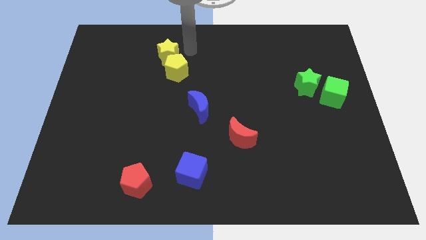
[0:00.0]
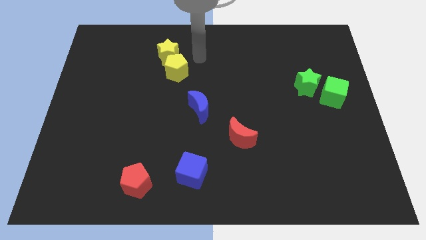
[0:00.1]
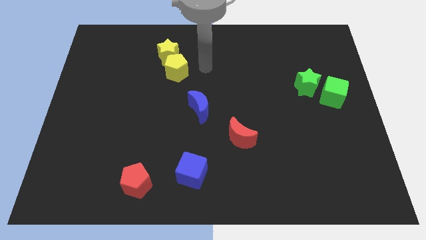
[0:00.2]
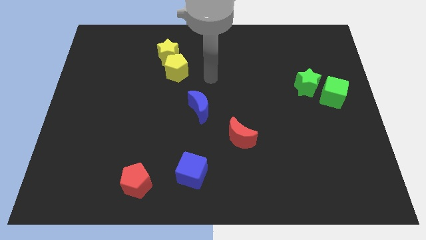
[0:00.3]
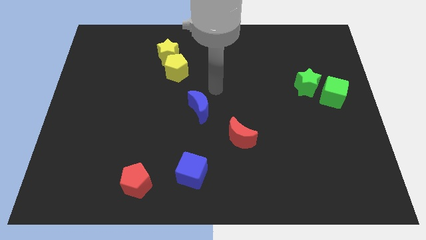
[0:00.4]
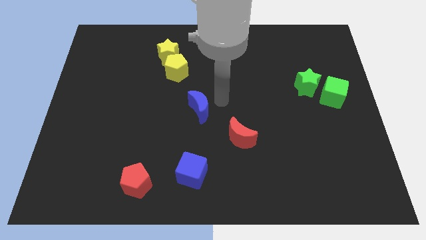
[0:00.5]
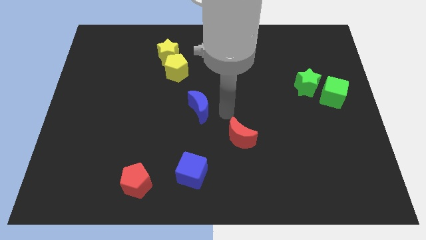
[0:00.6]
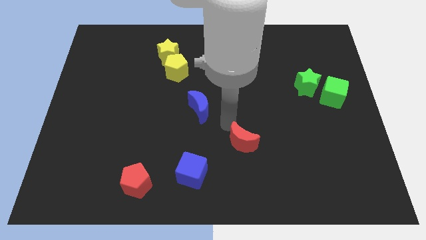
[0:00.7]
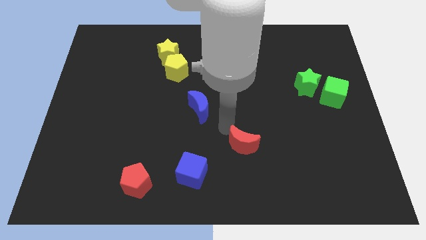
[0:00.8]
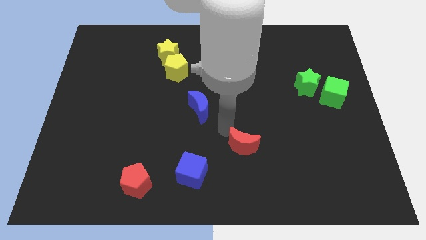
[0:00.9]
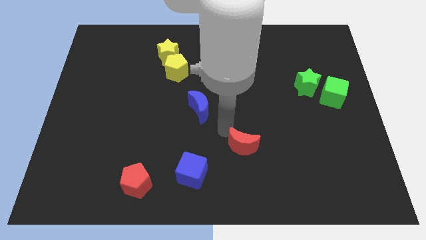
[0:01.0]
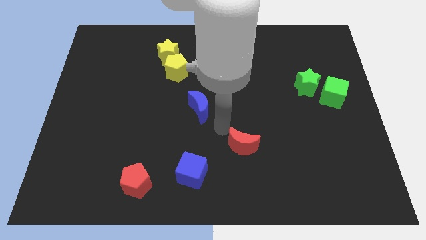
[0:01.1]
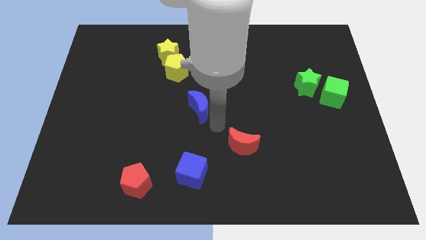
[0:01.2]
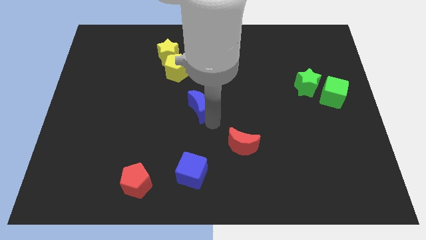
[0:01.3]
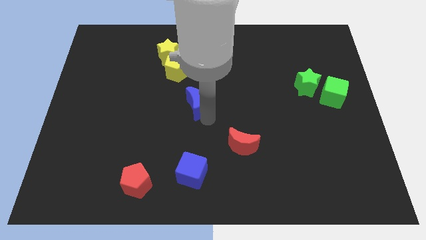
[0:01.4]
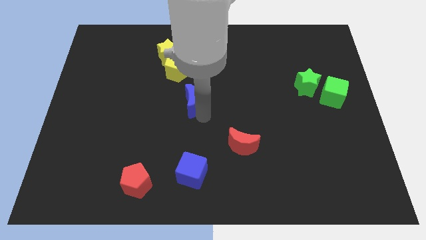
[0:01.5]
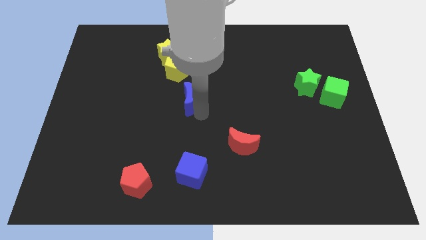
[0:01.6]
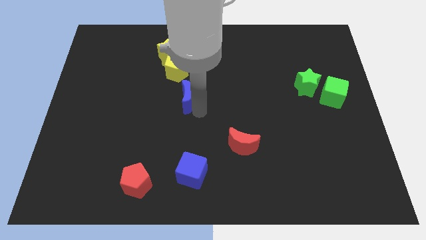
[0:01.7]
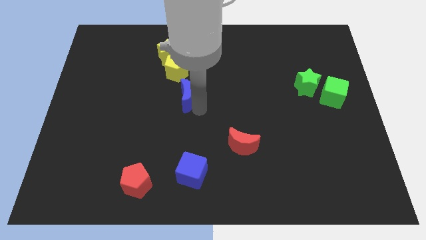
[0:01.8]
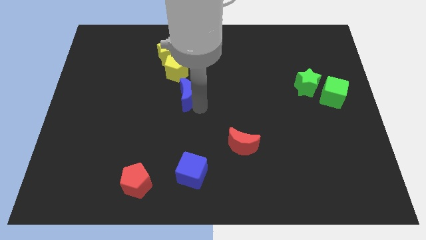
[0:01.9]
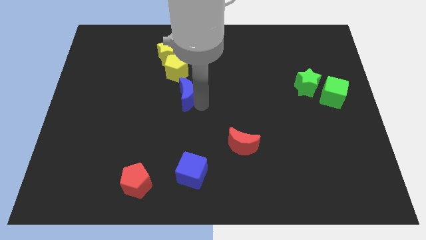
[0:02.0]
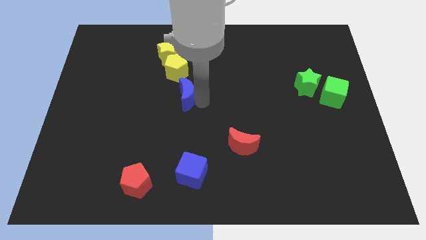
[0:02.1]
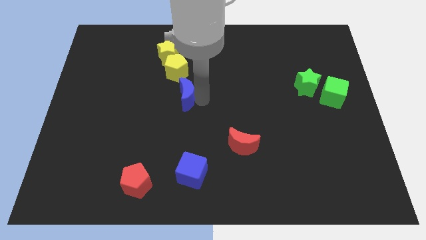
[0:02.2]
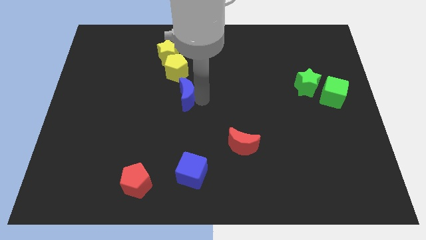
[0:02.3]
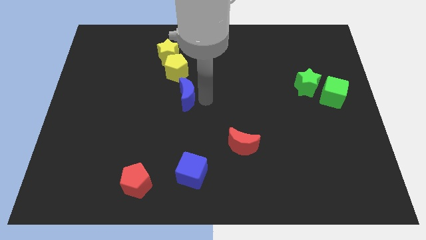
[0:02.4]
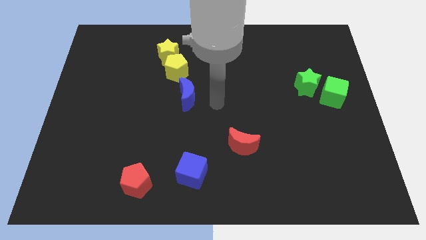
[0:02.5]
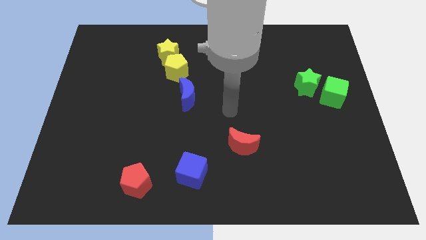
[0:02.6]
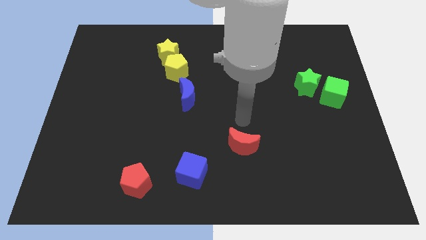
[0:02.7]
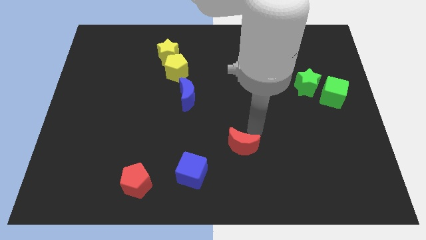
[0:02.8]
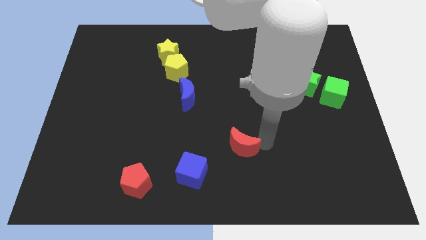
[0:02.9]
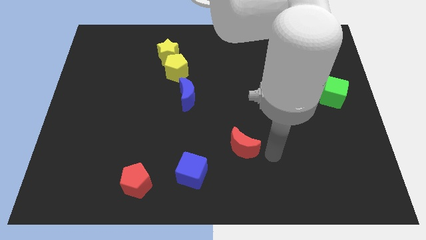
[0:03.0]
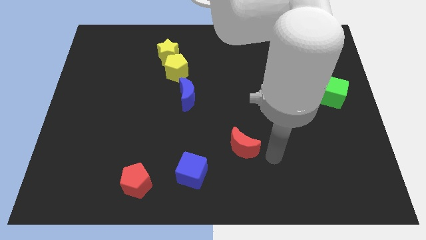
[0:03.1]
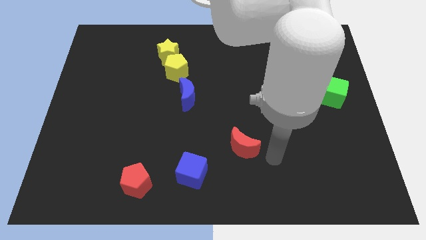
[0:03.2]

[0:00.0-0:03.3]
move the blue crescent to the bottom of the yellow pentagon

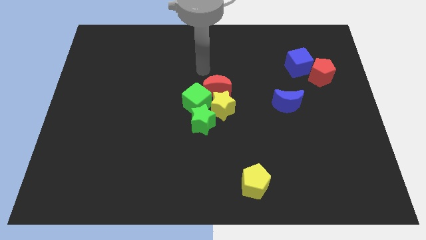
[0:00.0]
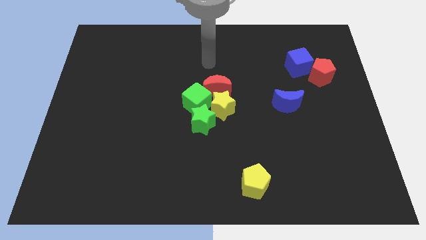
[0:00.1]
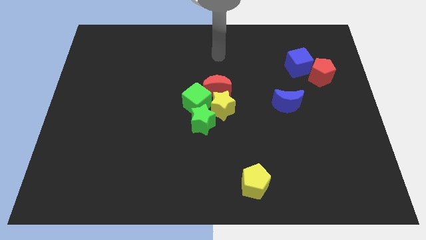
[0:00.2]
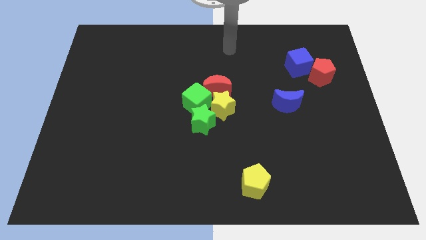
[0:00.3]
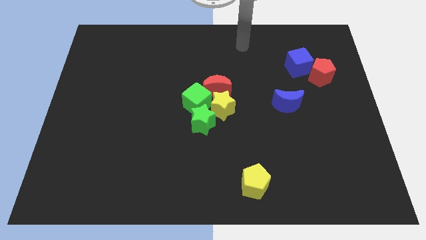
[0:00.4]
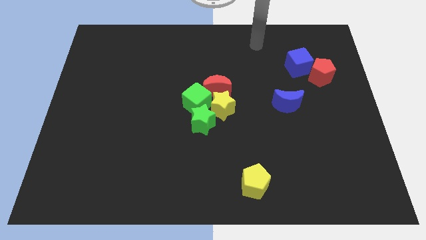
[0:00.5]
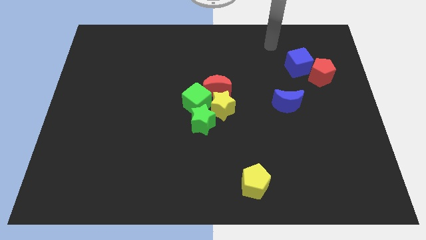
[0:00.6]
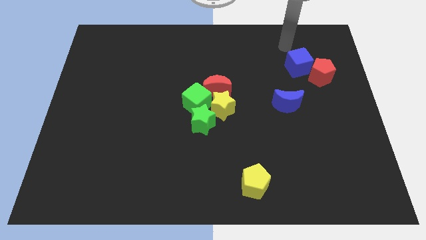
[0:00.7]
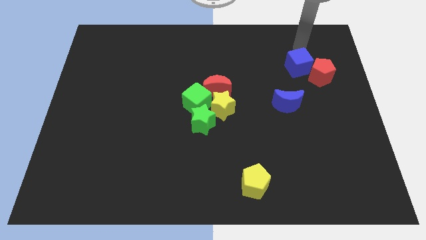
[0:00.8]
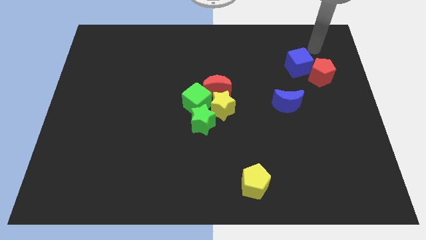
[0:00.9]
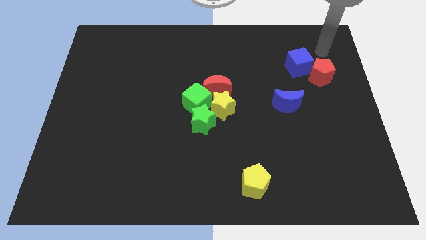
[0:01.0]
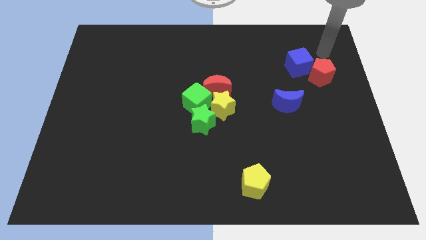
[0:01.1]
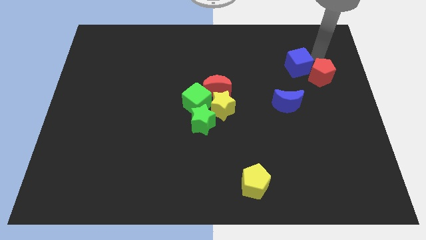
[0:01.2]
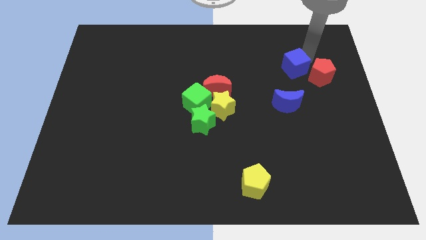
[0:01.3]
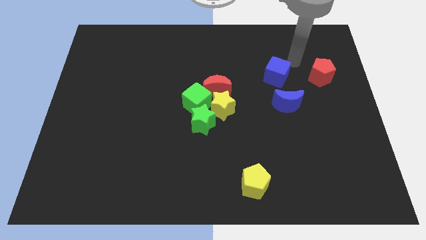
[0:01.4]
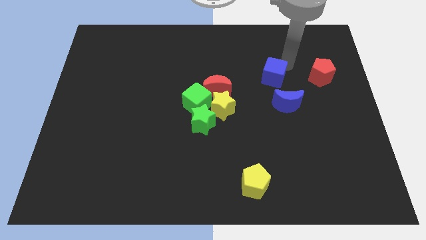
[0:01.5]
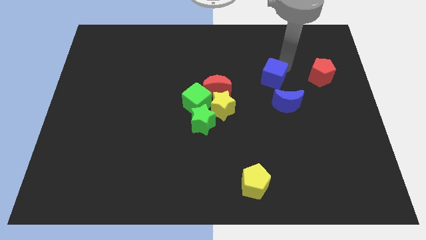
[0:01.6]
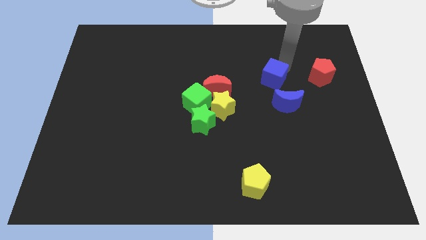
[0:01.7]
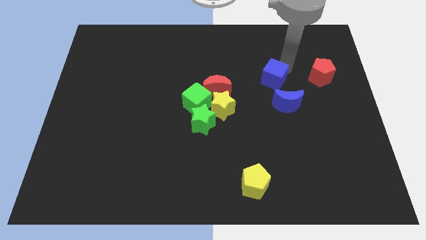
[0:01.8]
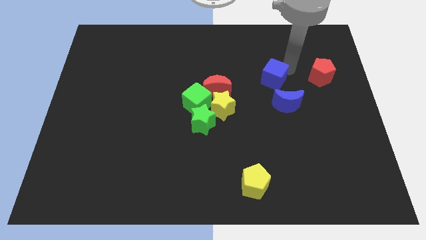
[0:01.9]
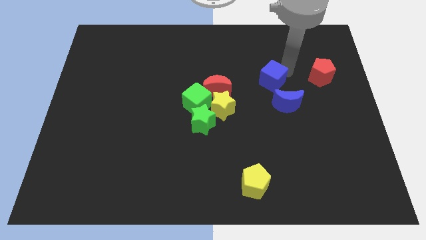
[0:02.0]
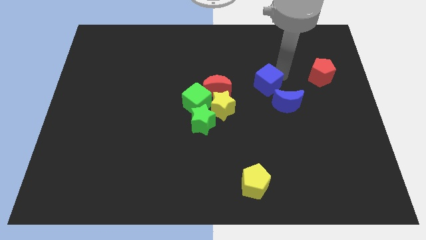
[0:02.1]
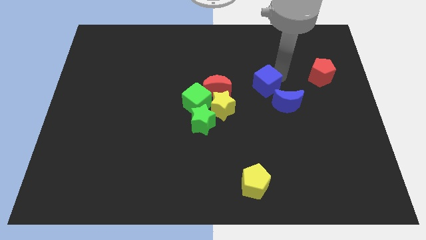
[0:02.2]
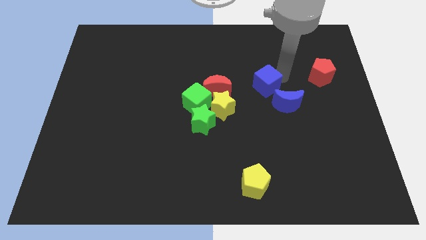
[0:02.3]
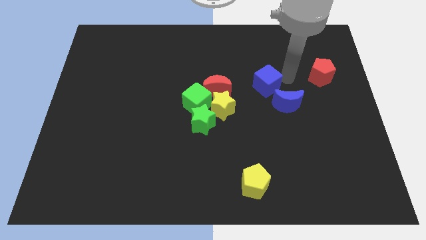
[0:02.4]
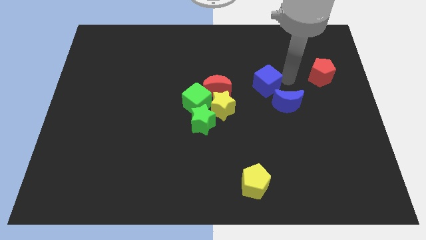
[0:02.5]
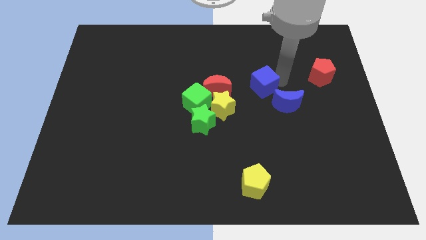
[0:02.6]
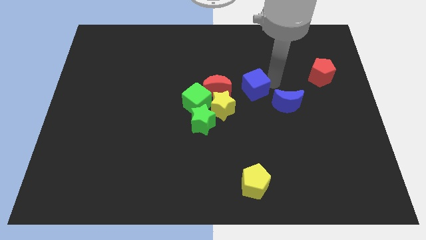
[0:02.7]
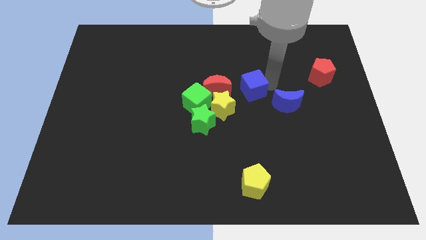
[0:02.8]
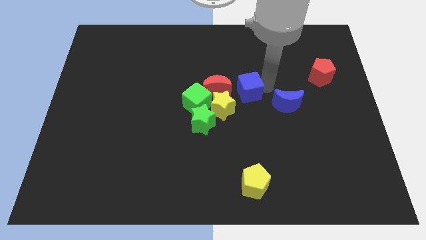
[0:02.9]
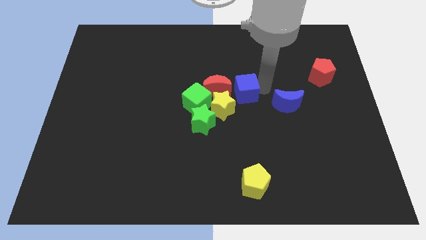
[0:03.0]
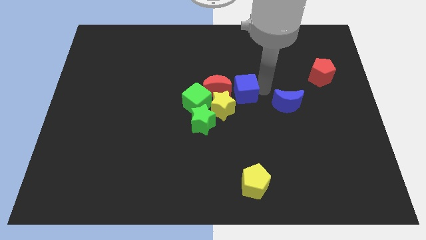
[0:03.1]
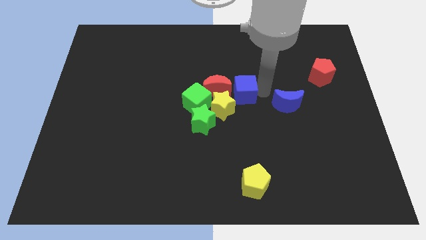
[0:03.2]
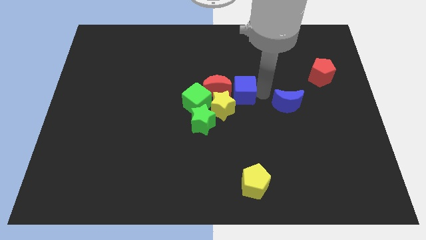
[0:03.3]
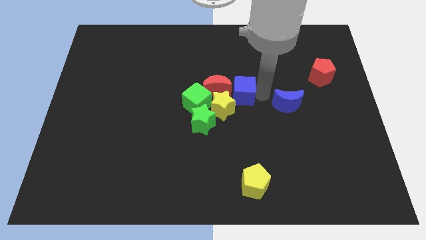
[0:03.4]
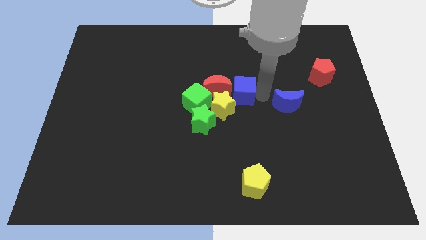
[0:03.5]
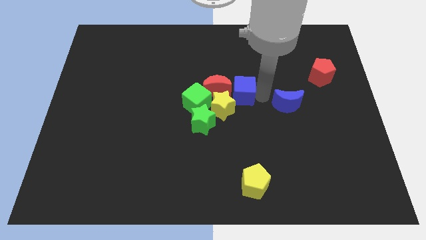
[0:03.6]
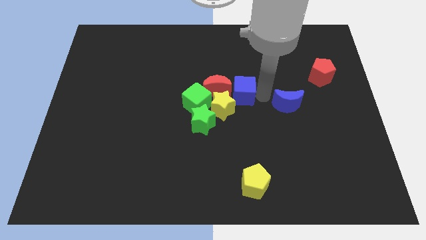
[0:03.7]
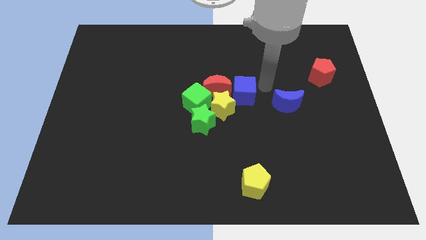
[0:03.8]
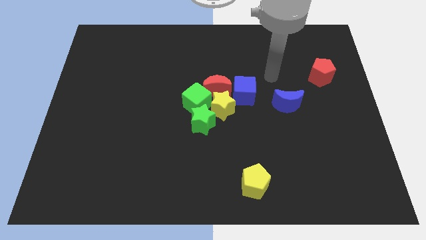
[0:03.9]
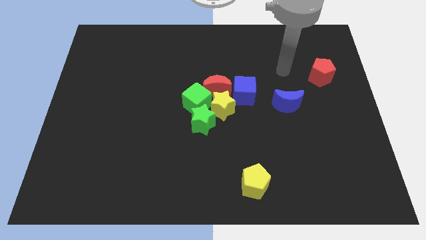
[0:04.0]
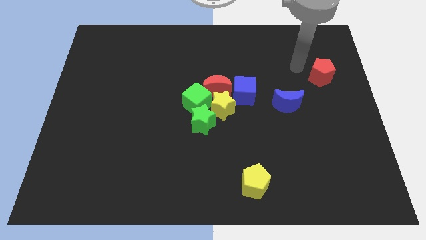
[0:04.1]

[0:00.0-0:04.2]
place the blue cube in between red crescent and blue crescent

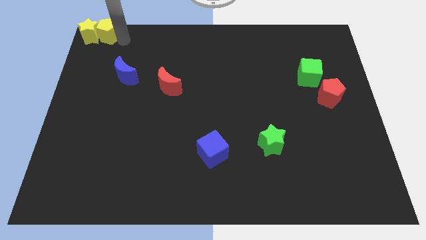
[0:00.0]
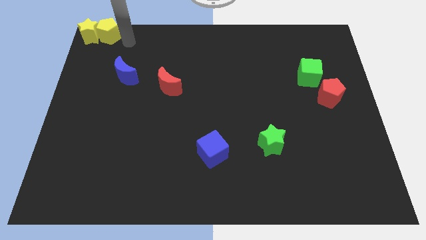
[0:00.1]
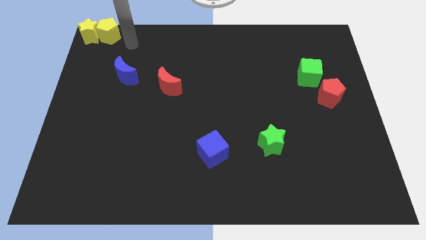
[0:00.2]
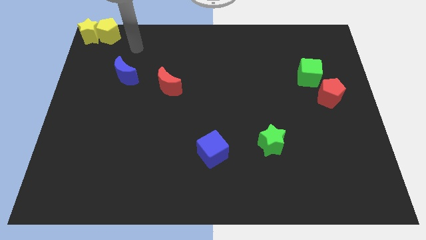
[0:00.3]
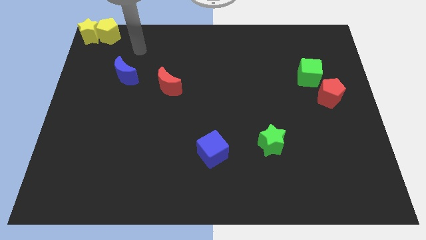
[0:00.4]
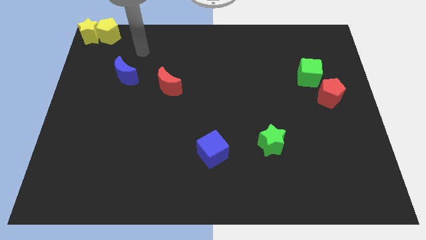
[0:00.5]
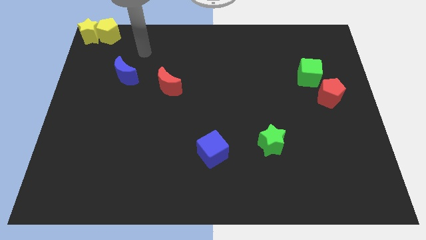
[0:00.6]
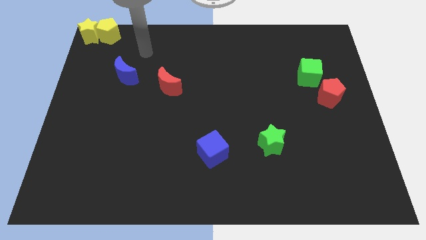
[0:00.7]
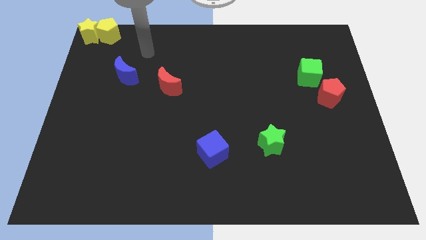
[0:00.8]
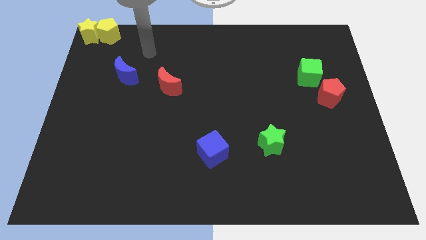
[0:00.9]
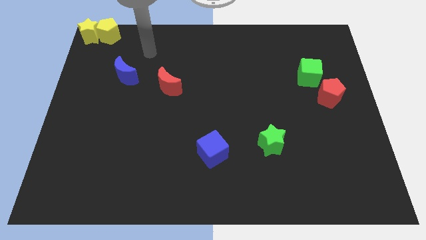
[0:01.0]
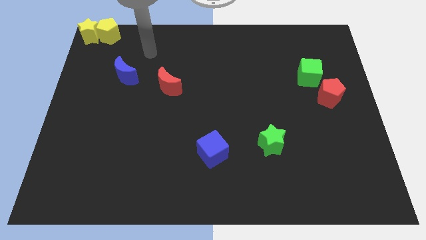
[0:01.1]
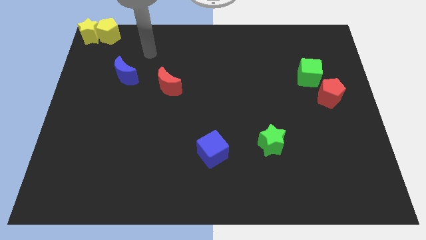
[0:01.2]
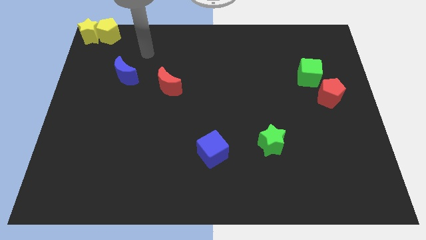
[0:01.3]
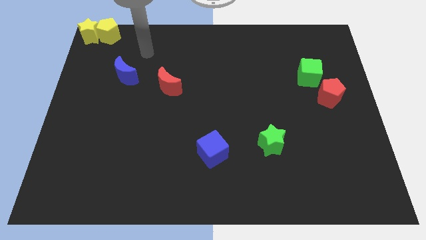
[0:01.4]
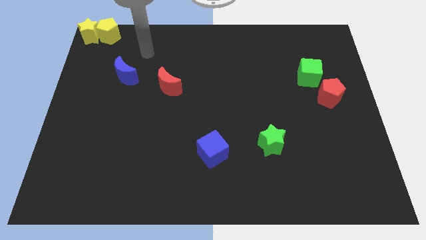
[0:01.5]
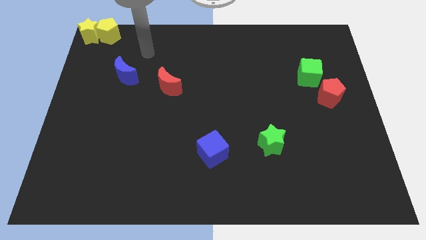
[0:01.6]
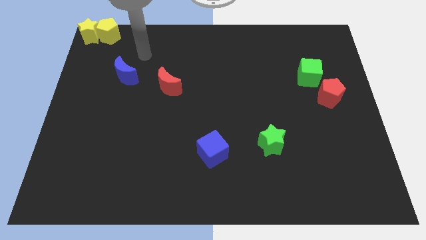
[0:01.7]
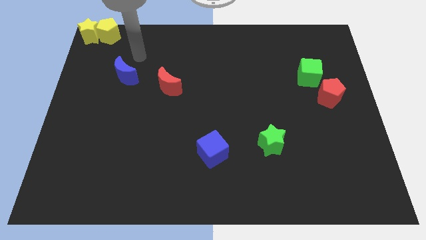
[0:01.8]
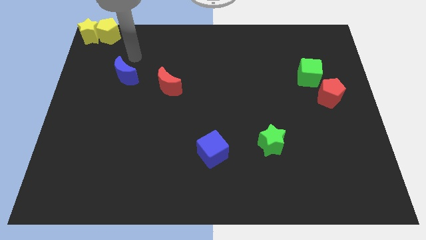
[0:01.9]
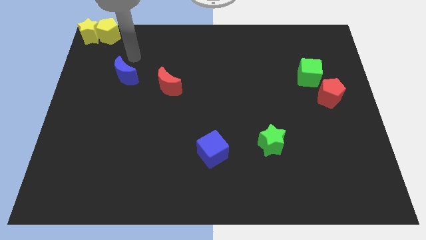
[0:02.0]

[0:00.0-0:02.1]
move your arm to the top of the blue crescent
